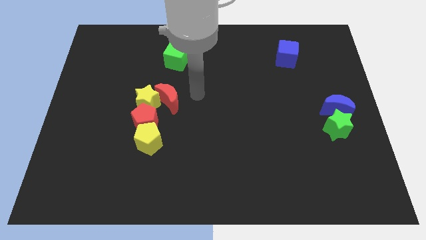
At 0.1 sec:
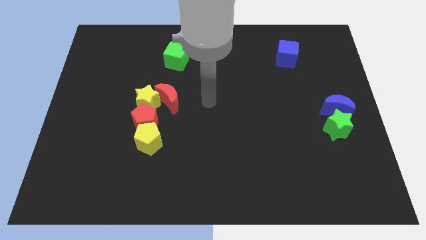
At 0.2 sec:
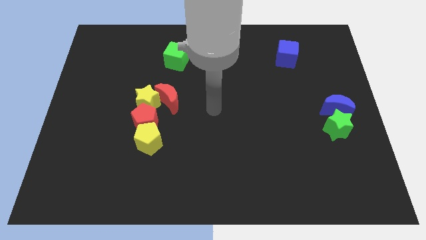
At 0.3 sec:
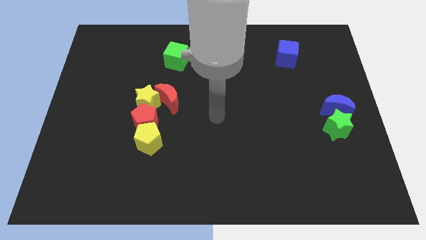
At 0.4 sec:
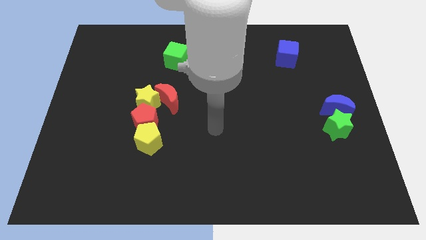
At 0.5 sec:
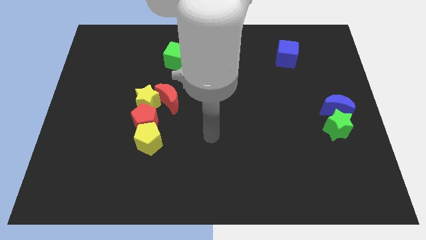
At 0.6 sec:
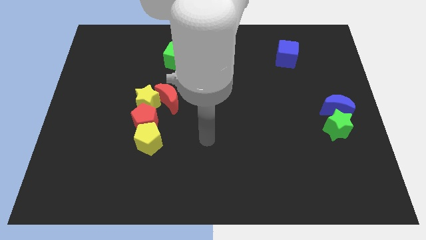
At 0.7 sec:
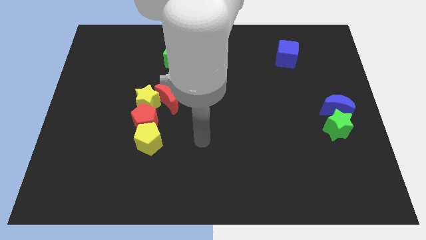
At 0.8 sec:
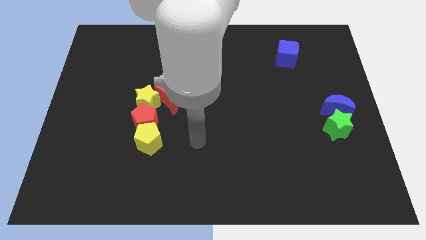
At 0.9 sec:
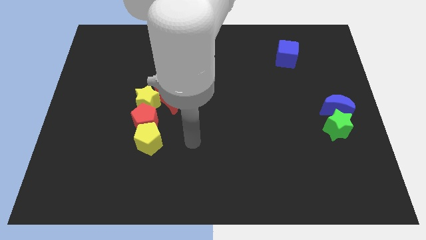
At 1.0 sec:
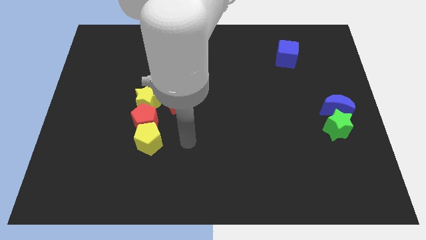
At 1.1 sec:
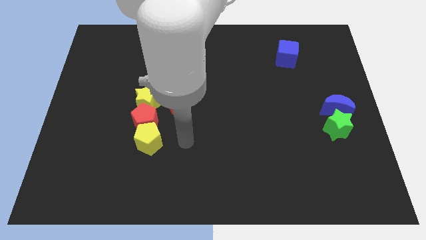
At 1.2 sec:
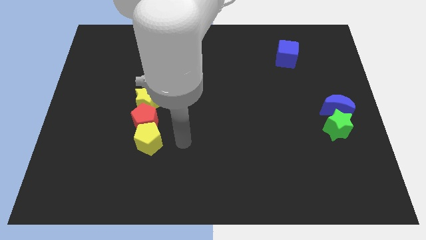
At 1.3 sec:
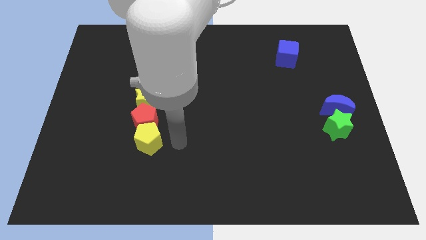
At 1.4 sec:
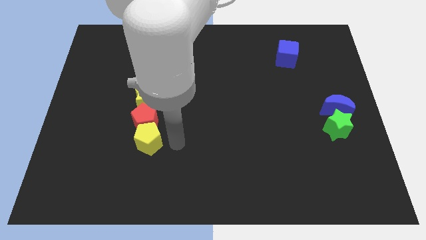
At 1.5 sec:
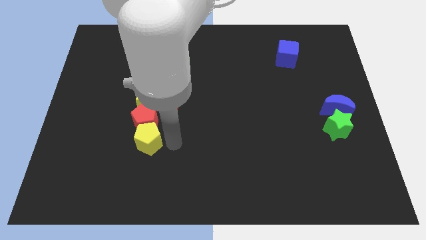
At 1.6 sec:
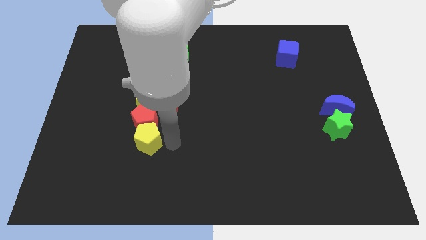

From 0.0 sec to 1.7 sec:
move the arm towards the right of the yellow pentagon

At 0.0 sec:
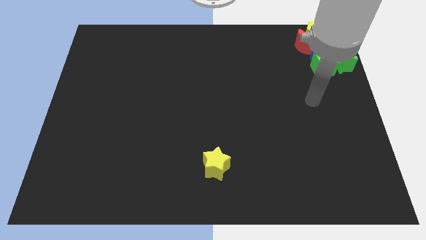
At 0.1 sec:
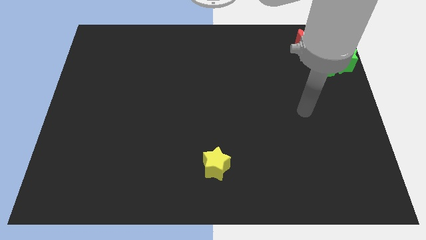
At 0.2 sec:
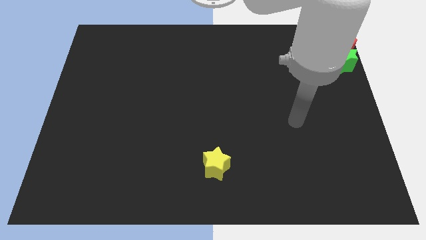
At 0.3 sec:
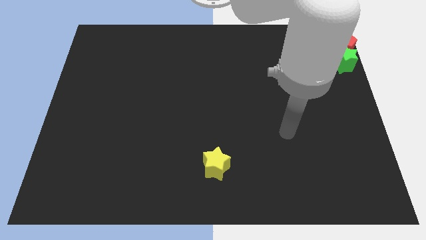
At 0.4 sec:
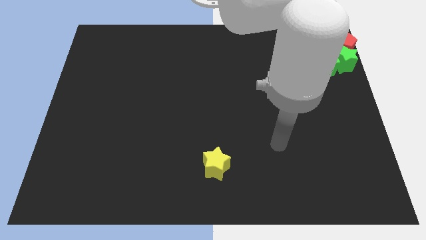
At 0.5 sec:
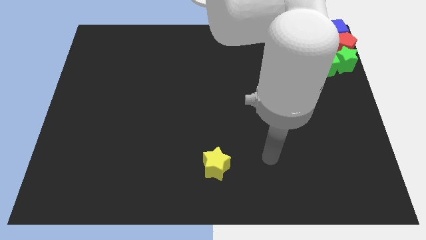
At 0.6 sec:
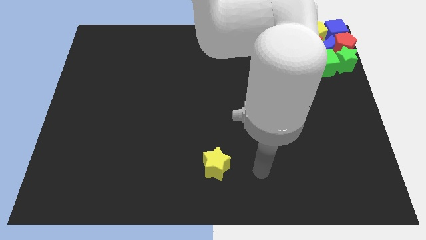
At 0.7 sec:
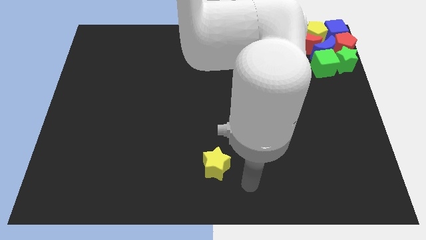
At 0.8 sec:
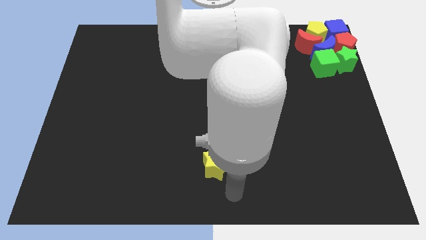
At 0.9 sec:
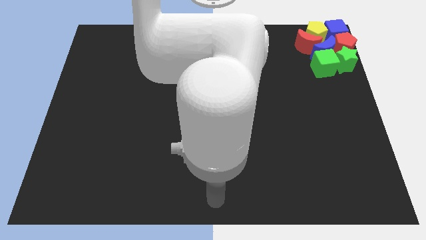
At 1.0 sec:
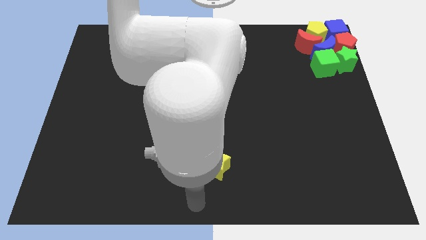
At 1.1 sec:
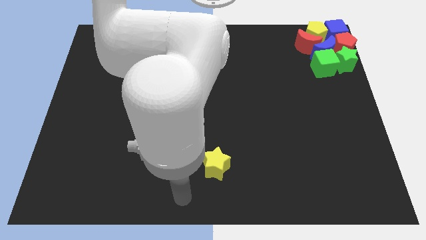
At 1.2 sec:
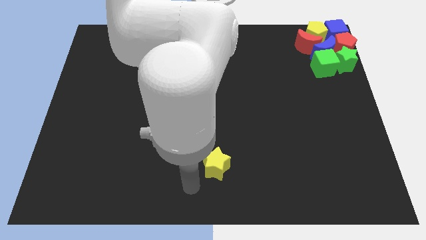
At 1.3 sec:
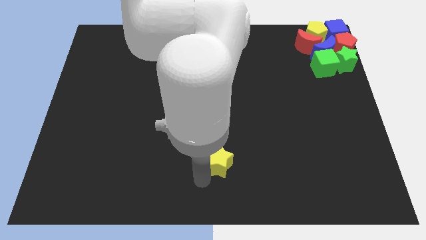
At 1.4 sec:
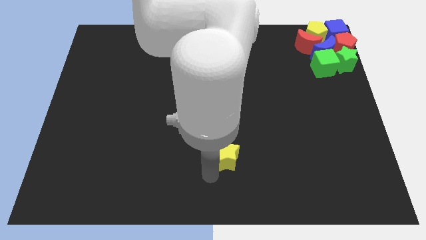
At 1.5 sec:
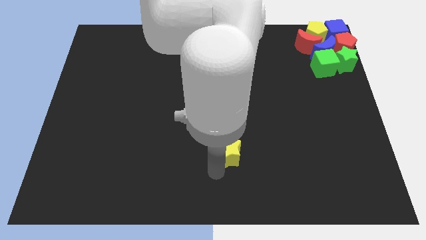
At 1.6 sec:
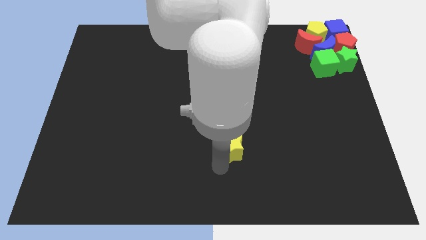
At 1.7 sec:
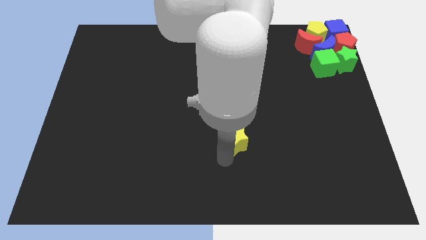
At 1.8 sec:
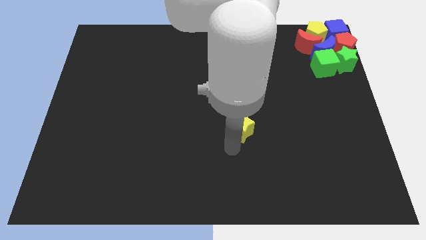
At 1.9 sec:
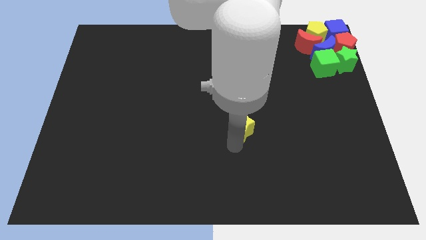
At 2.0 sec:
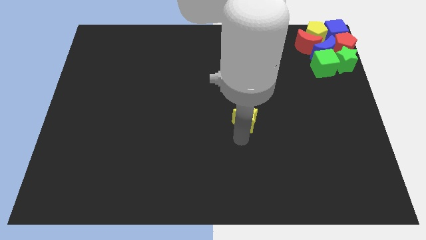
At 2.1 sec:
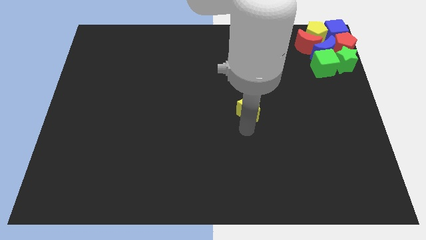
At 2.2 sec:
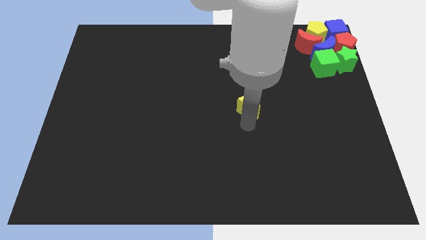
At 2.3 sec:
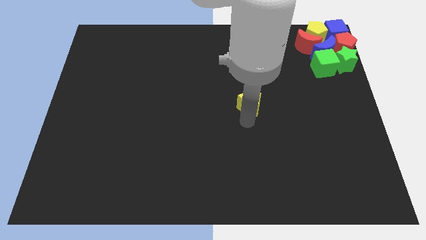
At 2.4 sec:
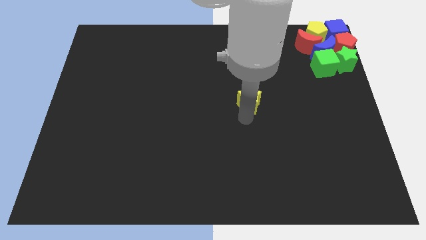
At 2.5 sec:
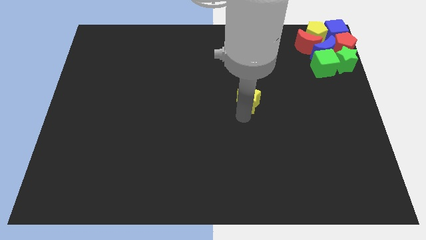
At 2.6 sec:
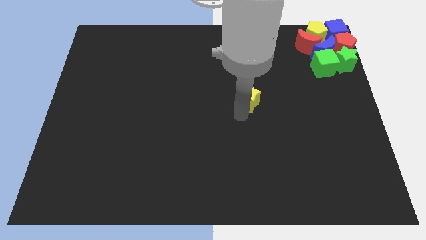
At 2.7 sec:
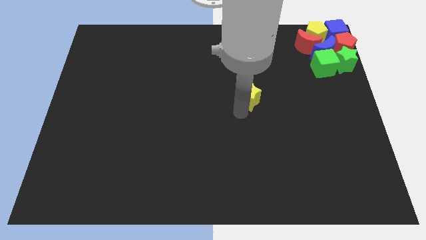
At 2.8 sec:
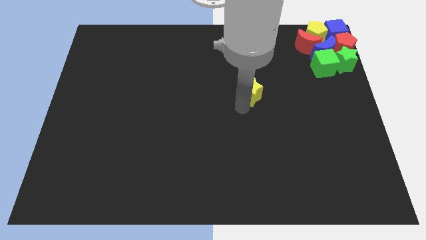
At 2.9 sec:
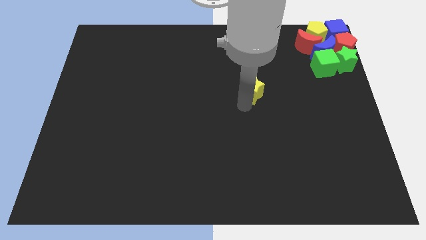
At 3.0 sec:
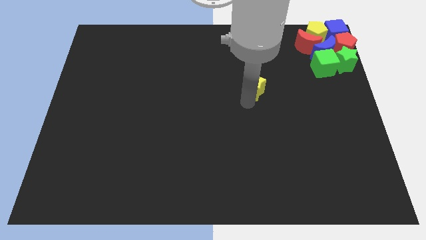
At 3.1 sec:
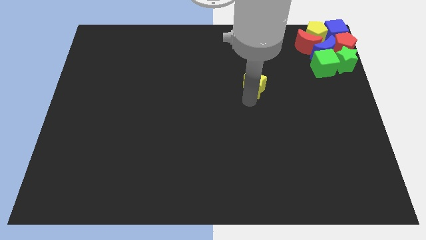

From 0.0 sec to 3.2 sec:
push the yellow star towards the group of blocks

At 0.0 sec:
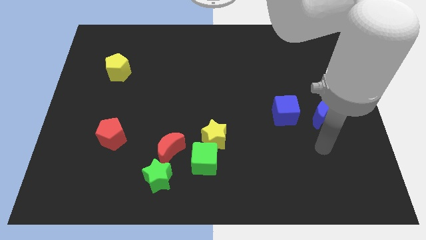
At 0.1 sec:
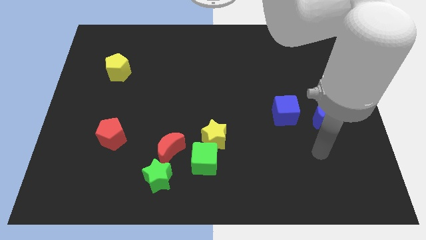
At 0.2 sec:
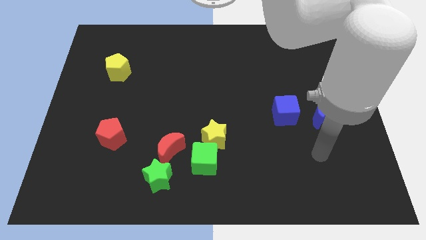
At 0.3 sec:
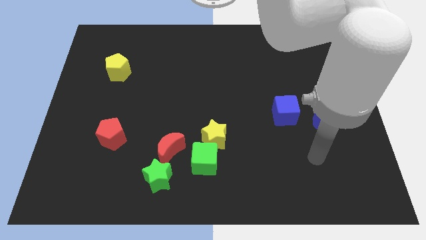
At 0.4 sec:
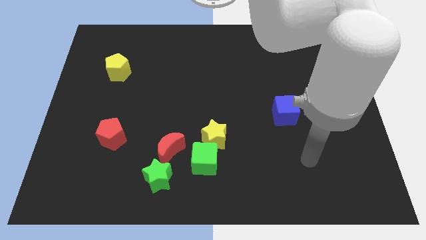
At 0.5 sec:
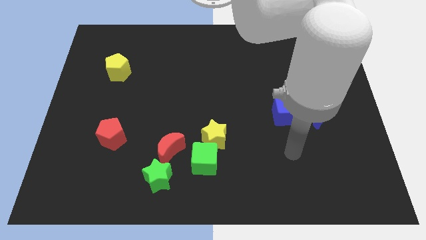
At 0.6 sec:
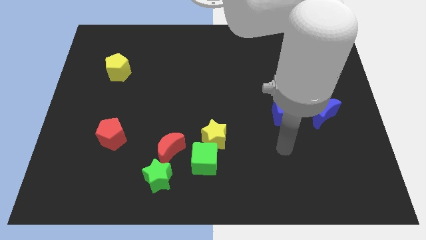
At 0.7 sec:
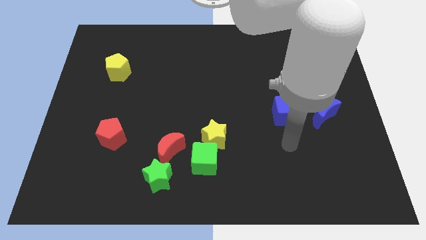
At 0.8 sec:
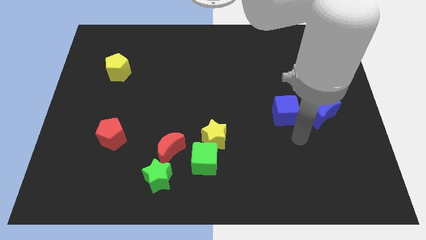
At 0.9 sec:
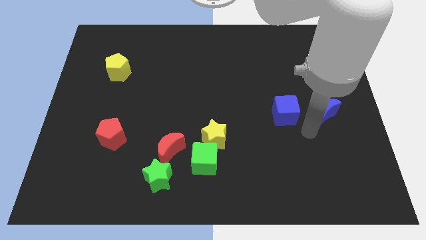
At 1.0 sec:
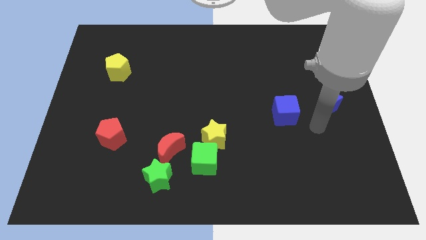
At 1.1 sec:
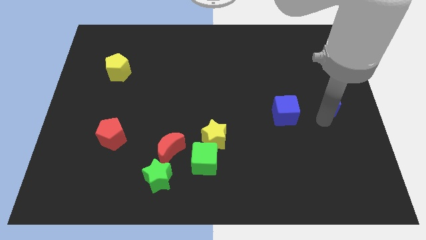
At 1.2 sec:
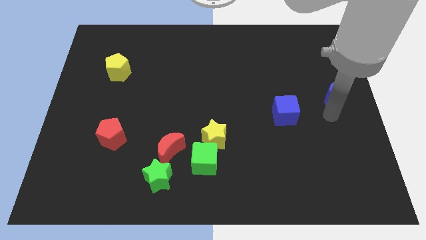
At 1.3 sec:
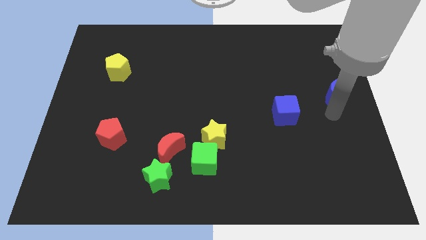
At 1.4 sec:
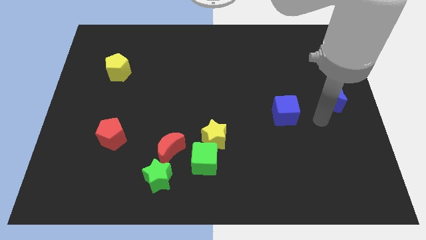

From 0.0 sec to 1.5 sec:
move the blue crescent right center of the board

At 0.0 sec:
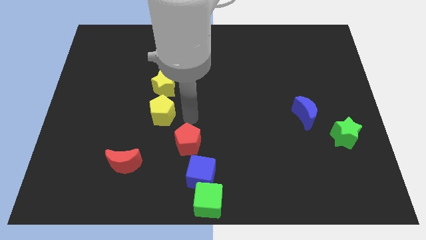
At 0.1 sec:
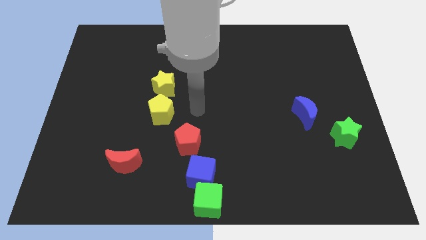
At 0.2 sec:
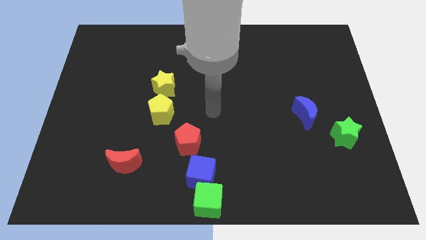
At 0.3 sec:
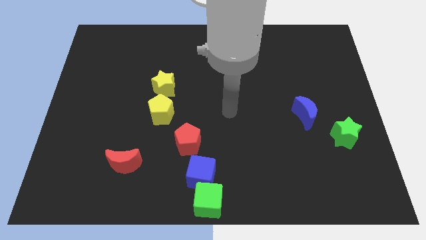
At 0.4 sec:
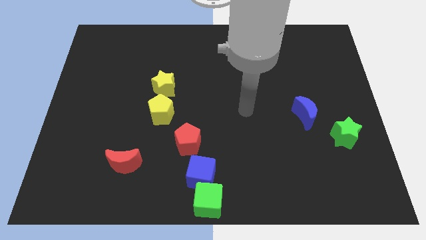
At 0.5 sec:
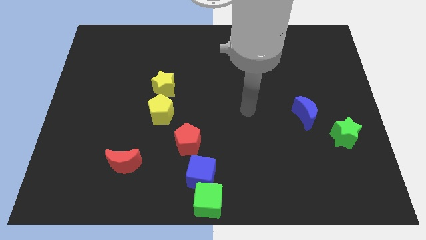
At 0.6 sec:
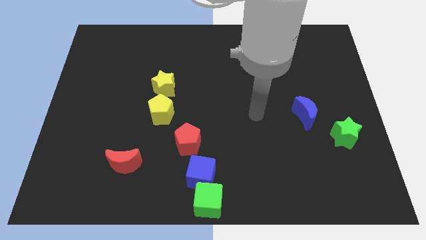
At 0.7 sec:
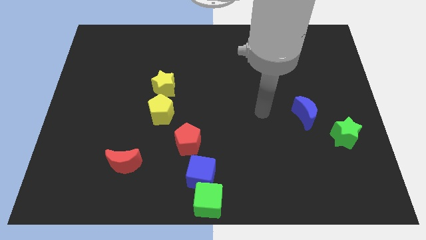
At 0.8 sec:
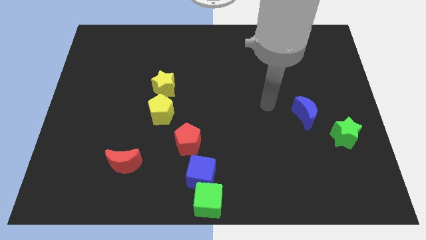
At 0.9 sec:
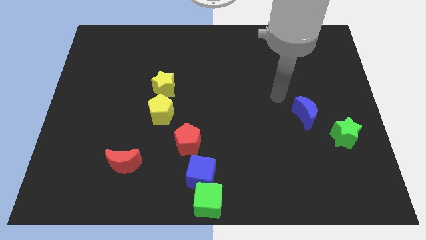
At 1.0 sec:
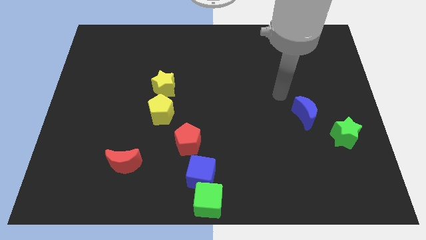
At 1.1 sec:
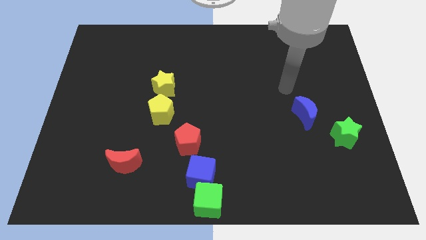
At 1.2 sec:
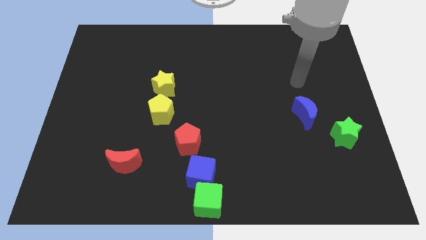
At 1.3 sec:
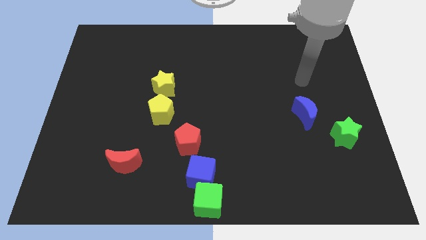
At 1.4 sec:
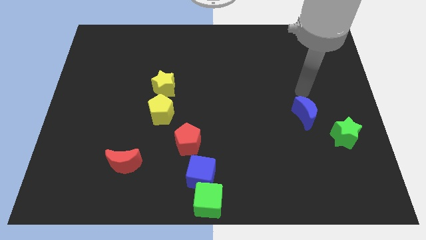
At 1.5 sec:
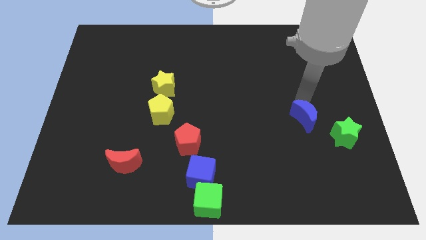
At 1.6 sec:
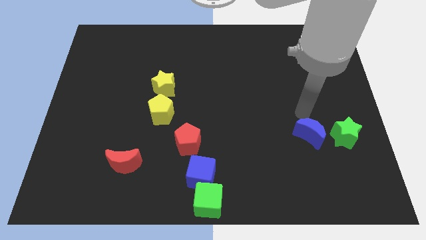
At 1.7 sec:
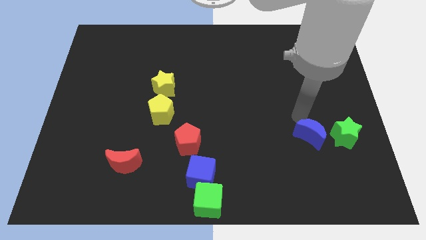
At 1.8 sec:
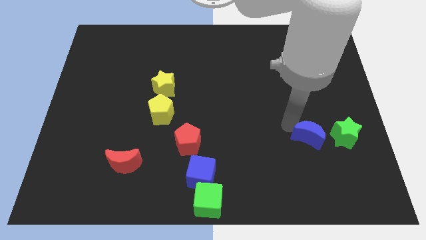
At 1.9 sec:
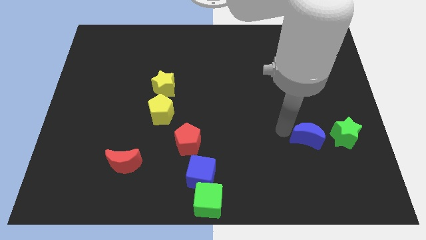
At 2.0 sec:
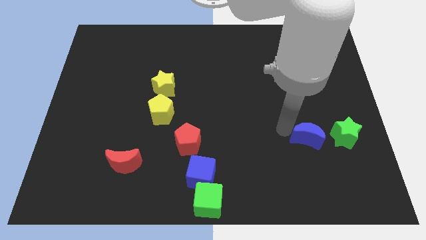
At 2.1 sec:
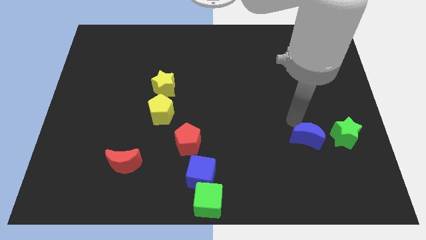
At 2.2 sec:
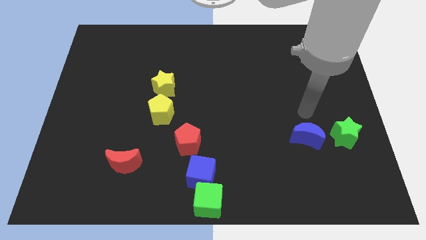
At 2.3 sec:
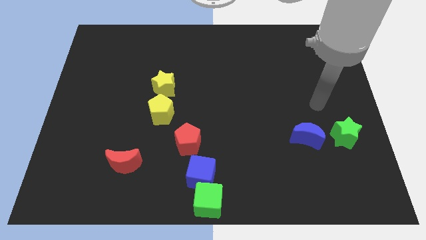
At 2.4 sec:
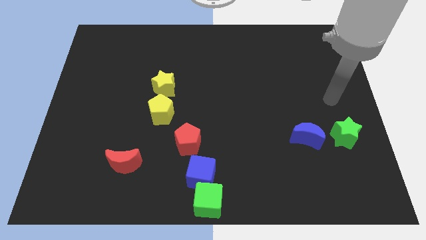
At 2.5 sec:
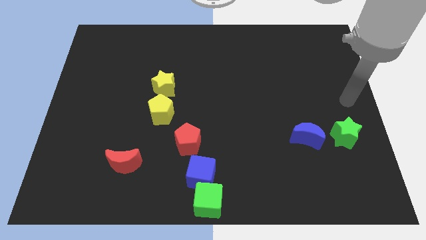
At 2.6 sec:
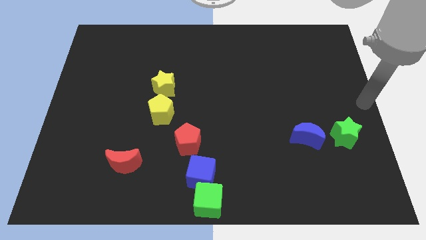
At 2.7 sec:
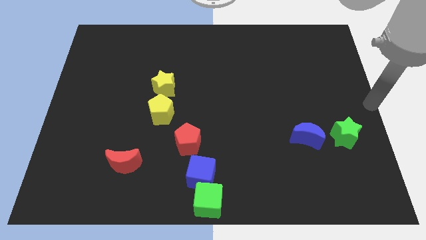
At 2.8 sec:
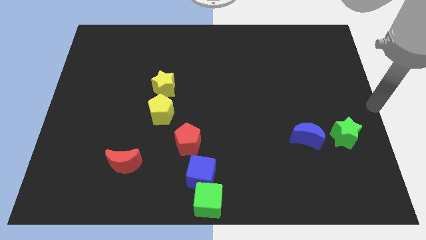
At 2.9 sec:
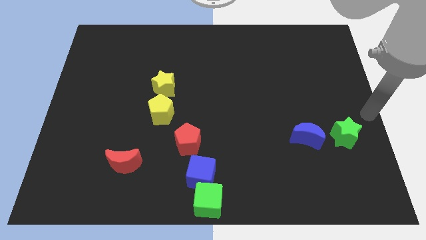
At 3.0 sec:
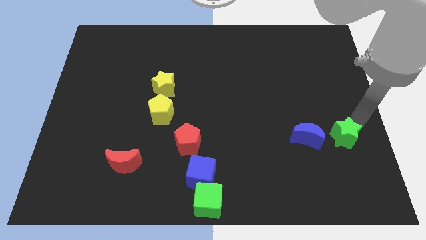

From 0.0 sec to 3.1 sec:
place the blue crescent horizontally at the left side of the green star
